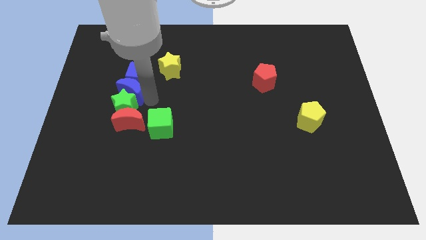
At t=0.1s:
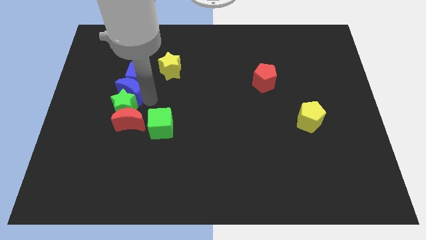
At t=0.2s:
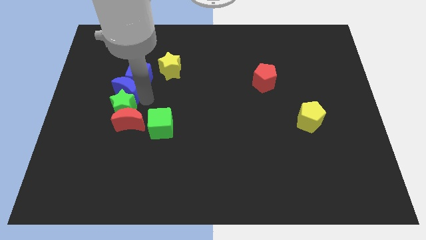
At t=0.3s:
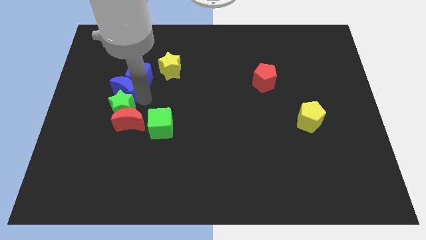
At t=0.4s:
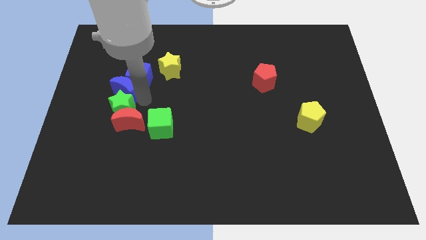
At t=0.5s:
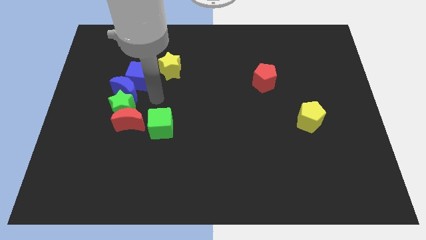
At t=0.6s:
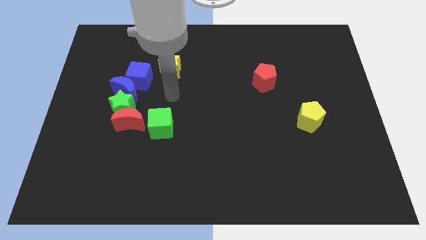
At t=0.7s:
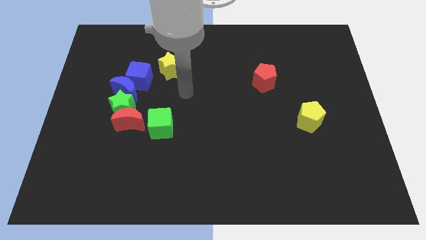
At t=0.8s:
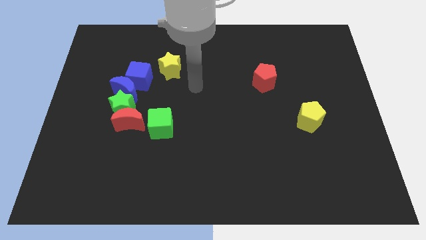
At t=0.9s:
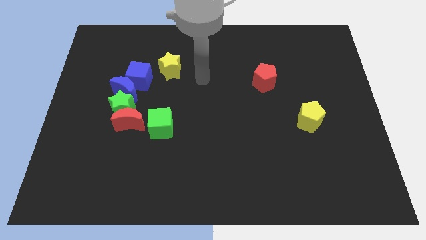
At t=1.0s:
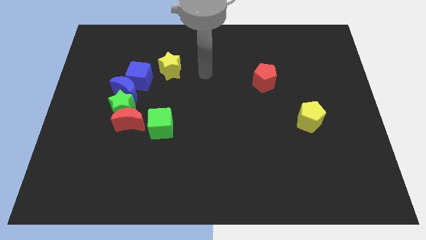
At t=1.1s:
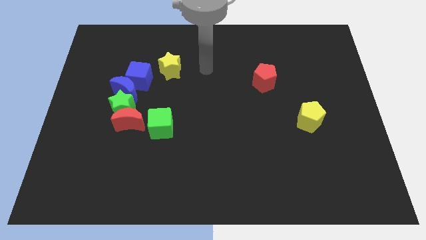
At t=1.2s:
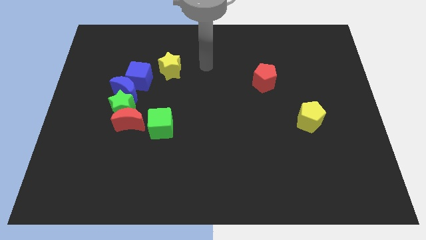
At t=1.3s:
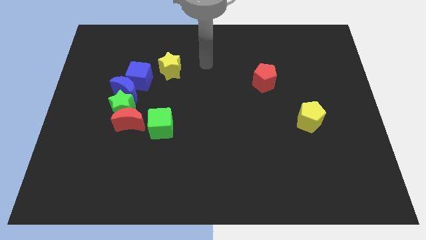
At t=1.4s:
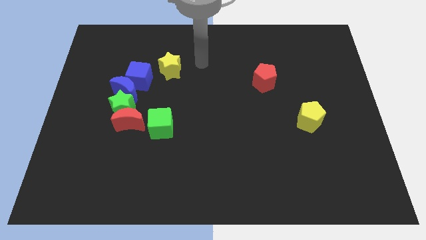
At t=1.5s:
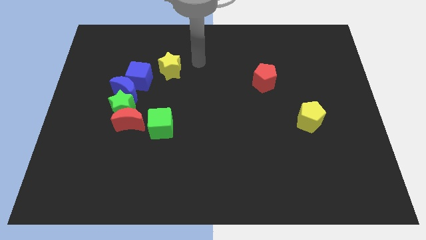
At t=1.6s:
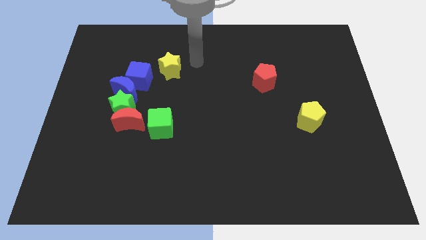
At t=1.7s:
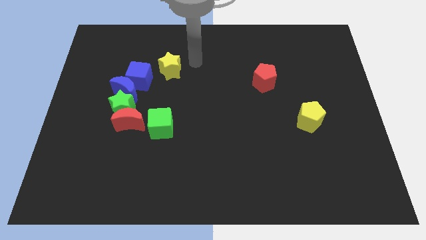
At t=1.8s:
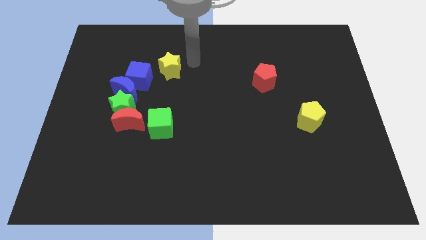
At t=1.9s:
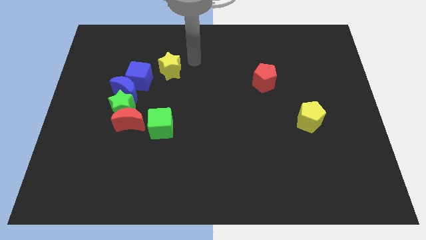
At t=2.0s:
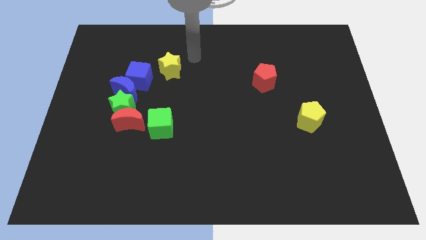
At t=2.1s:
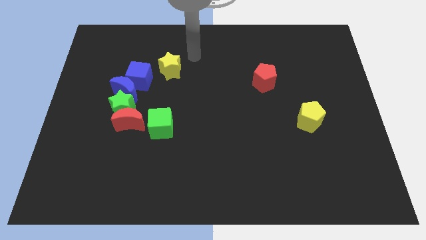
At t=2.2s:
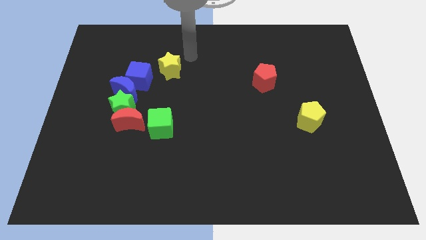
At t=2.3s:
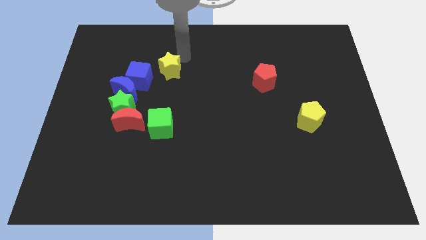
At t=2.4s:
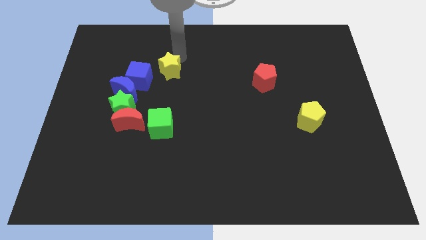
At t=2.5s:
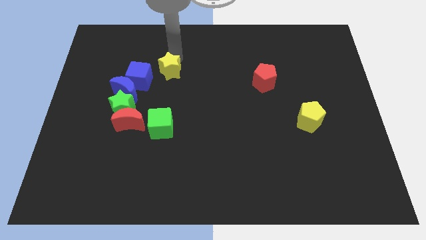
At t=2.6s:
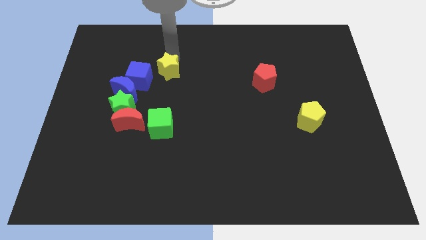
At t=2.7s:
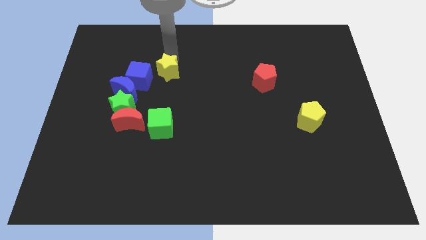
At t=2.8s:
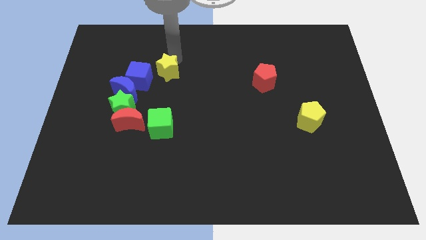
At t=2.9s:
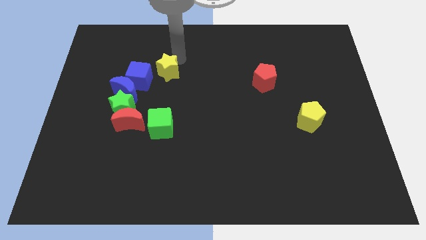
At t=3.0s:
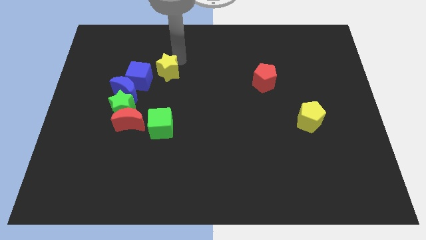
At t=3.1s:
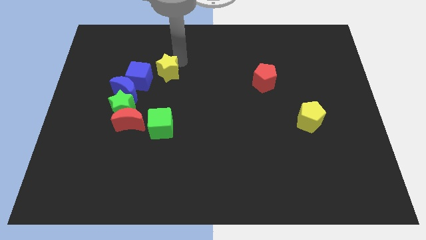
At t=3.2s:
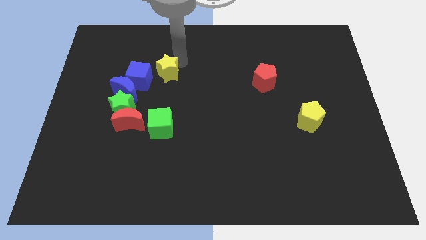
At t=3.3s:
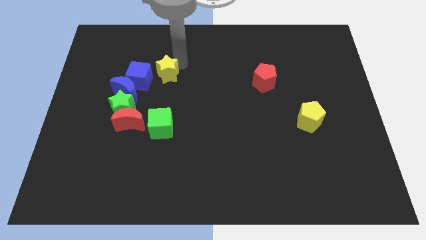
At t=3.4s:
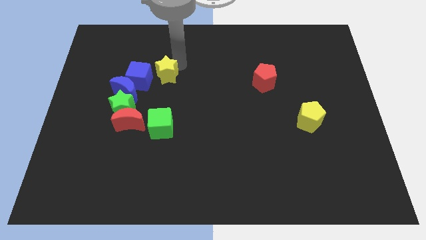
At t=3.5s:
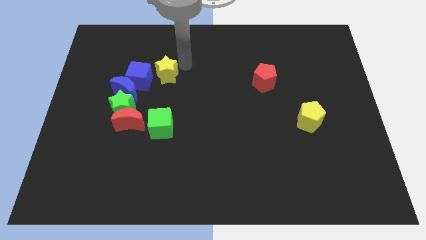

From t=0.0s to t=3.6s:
point your arm above yellow star

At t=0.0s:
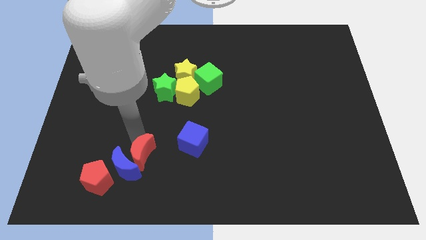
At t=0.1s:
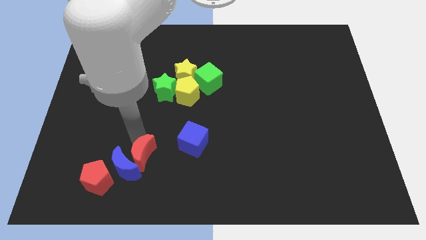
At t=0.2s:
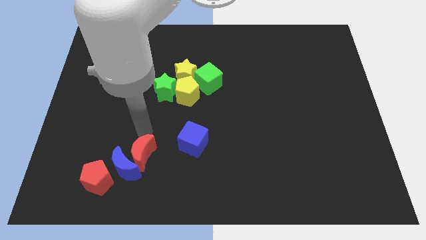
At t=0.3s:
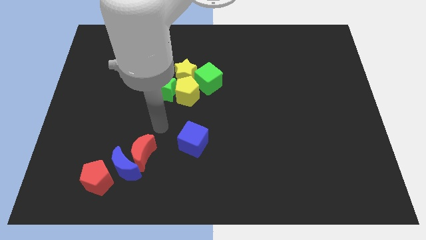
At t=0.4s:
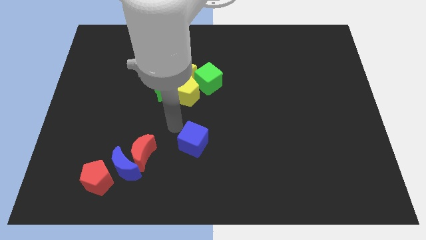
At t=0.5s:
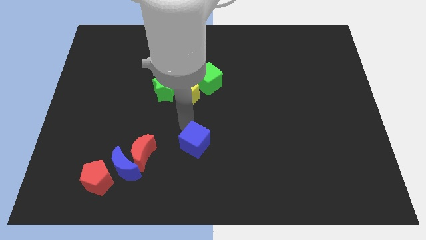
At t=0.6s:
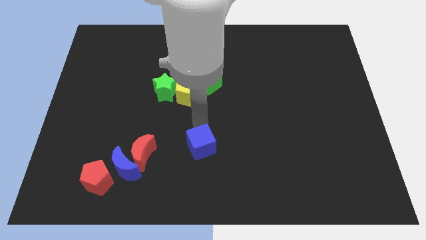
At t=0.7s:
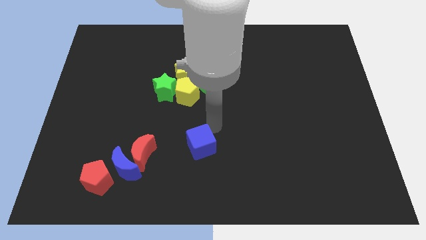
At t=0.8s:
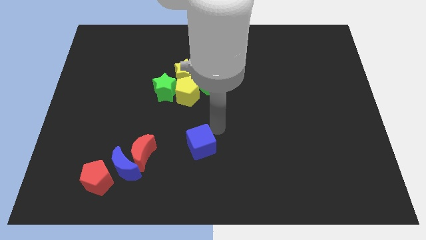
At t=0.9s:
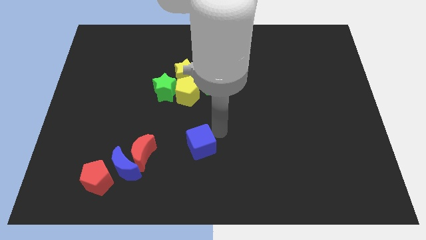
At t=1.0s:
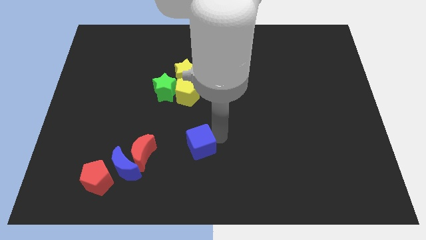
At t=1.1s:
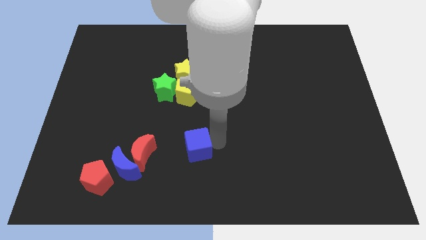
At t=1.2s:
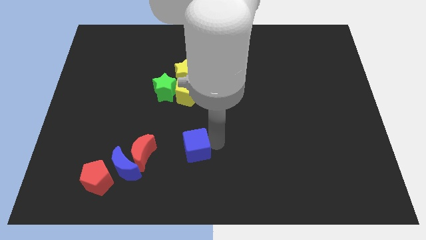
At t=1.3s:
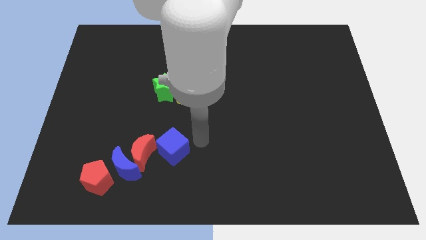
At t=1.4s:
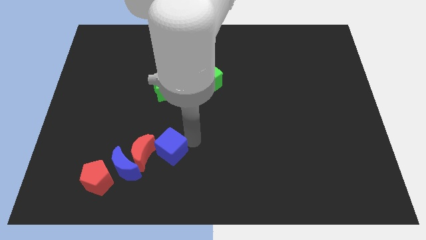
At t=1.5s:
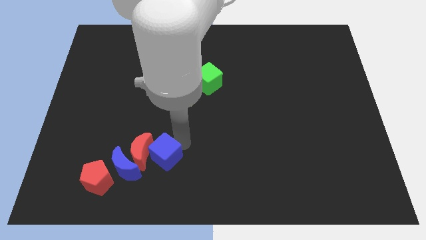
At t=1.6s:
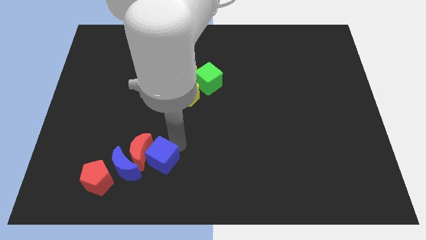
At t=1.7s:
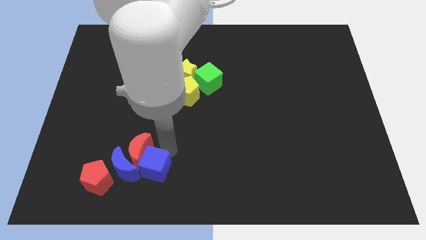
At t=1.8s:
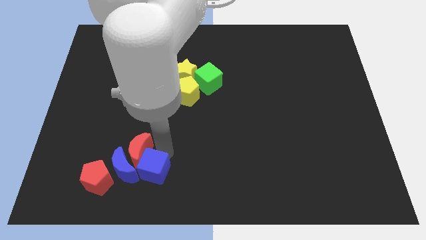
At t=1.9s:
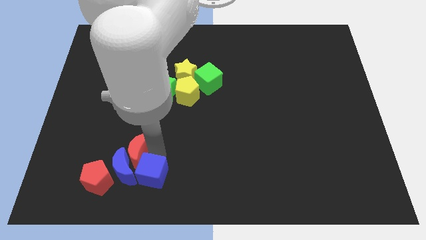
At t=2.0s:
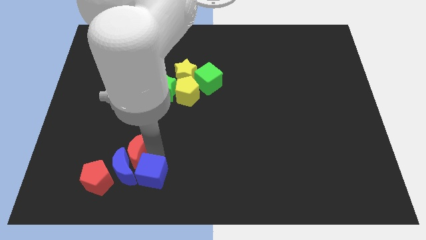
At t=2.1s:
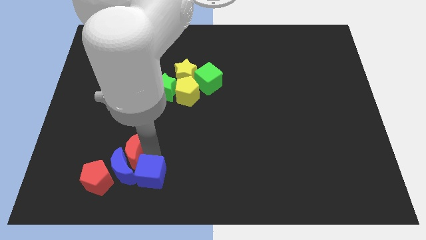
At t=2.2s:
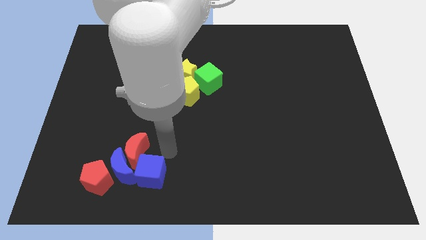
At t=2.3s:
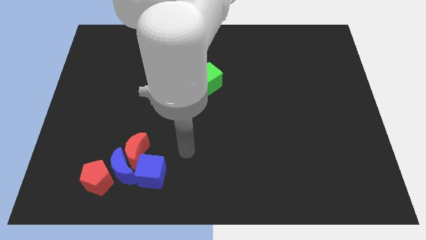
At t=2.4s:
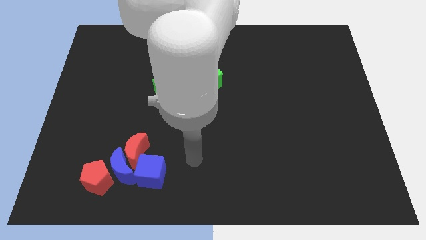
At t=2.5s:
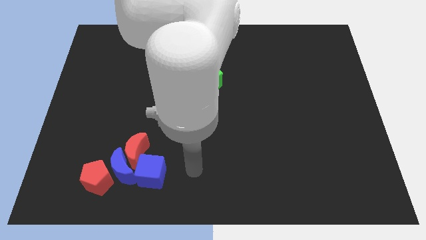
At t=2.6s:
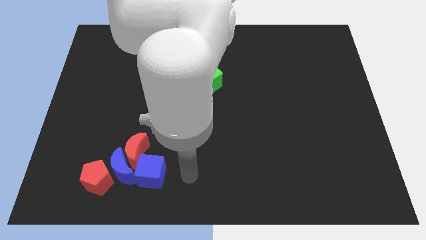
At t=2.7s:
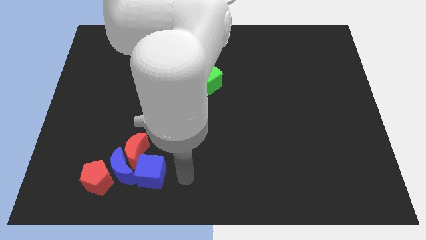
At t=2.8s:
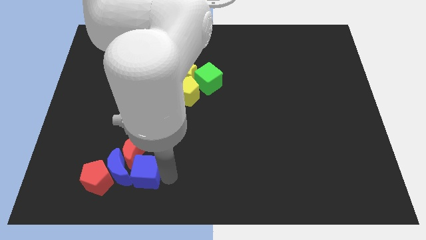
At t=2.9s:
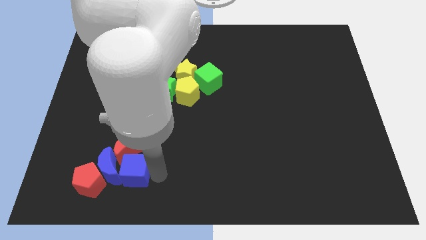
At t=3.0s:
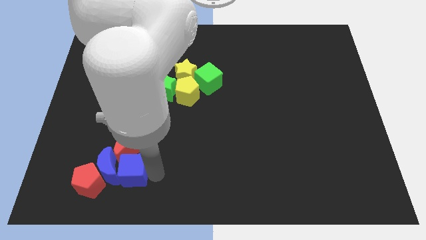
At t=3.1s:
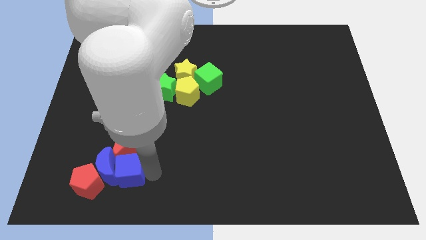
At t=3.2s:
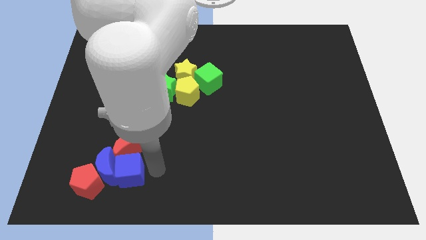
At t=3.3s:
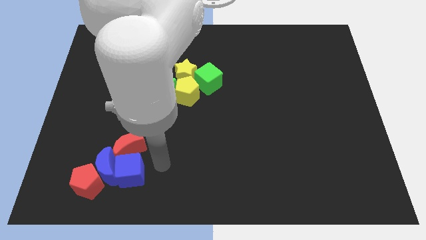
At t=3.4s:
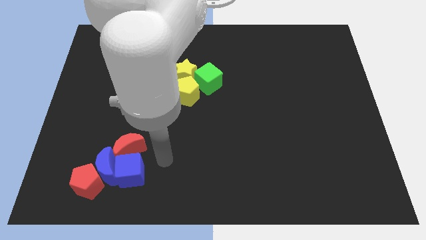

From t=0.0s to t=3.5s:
push the blue cube into the group of blocks

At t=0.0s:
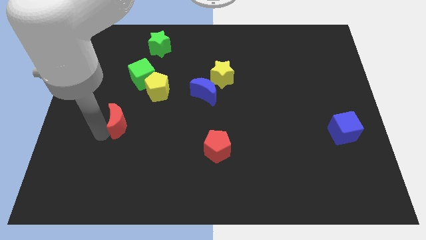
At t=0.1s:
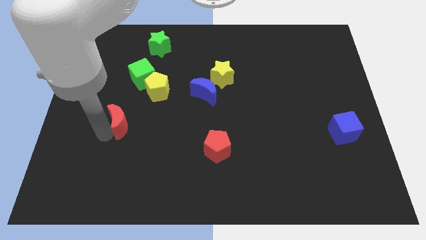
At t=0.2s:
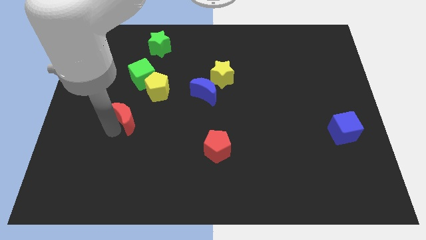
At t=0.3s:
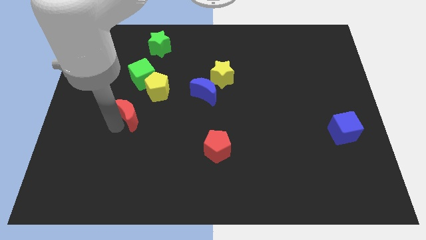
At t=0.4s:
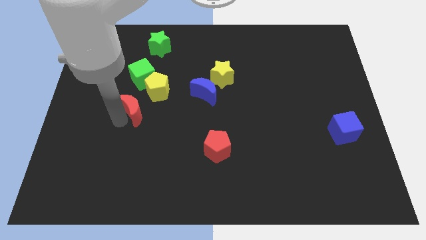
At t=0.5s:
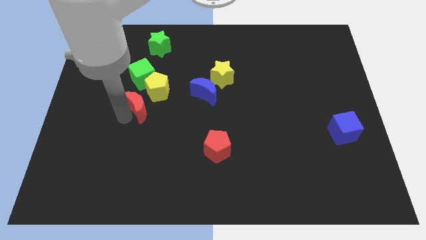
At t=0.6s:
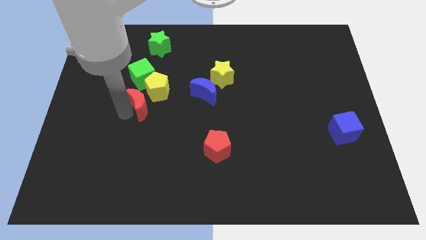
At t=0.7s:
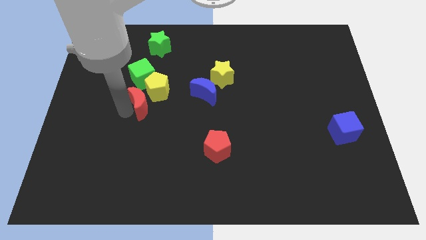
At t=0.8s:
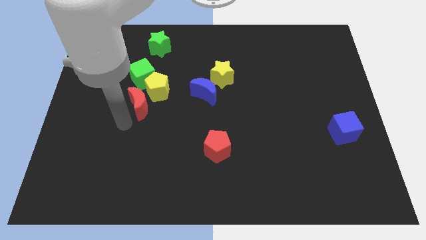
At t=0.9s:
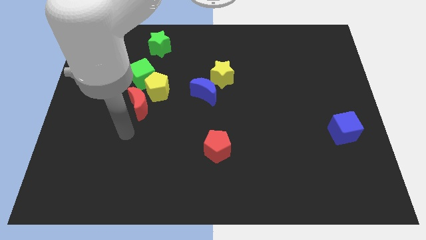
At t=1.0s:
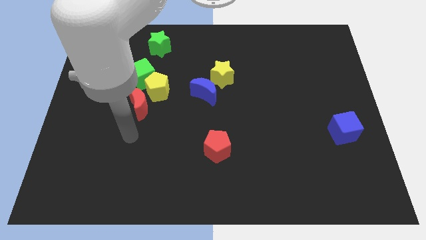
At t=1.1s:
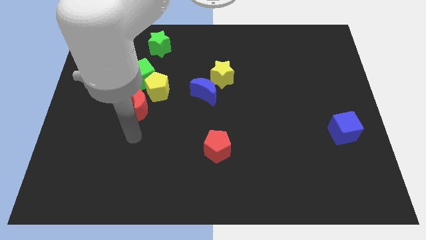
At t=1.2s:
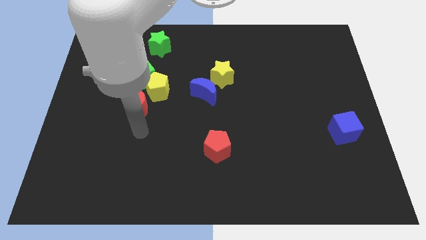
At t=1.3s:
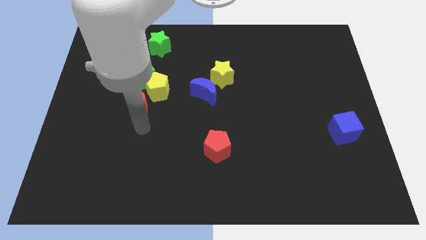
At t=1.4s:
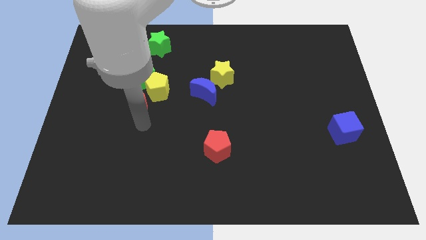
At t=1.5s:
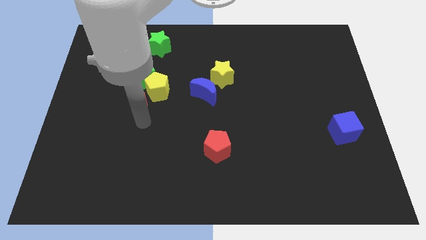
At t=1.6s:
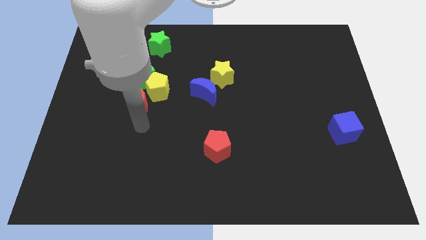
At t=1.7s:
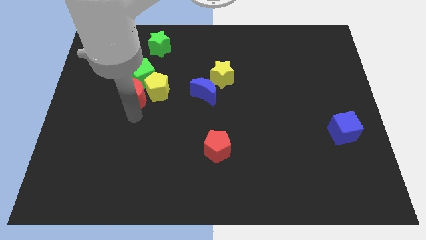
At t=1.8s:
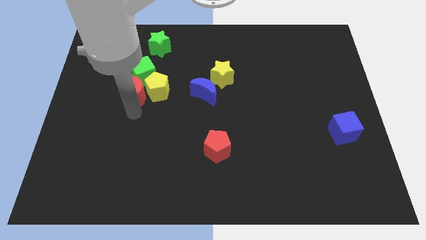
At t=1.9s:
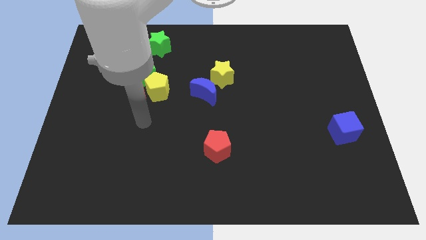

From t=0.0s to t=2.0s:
slide the red moon into the green cube
